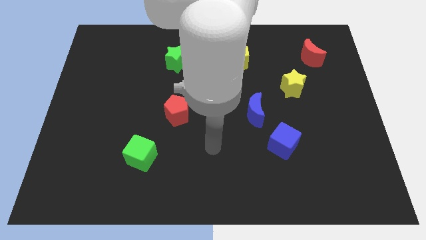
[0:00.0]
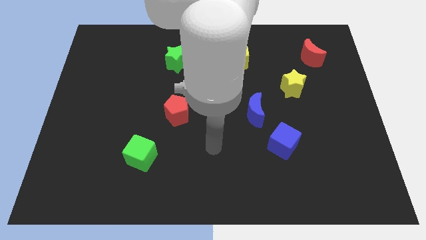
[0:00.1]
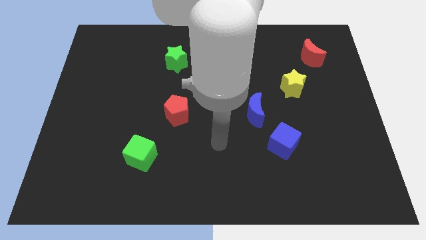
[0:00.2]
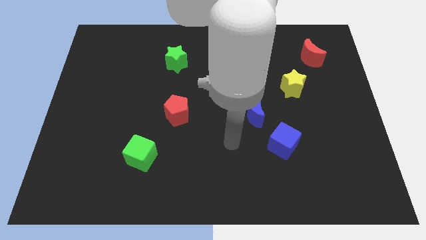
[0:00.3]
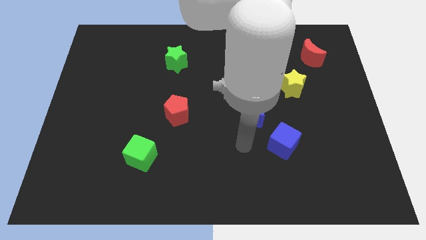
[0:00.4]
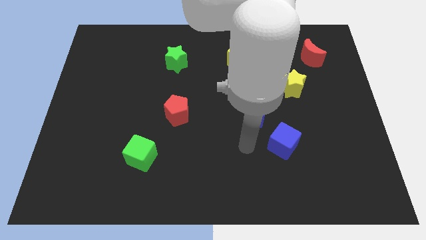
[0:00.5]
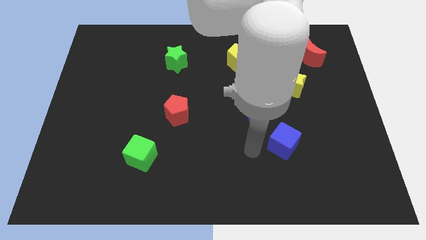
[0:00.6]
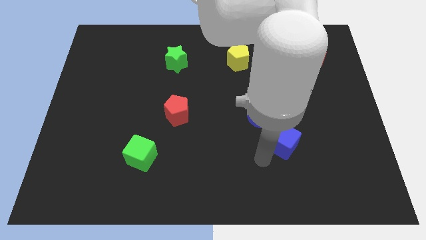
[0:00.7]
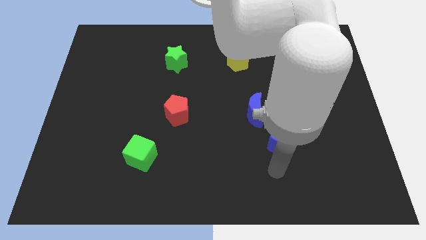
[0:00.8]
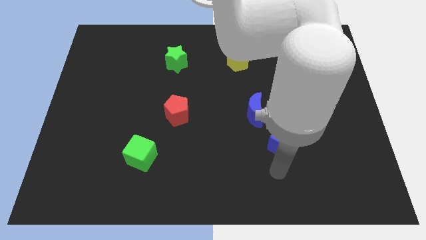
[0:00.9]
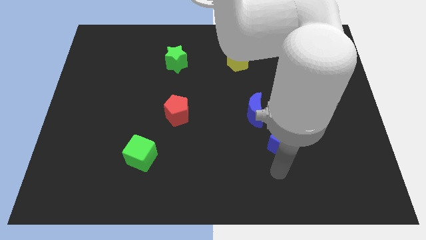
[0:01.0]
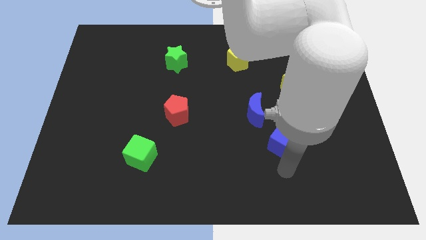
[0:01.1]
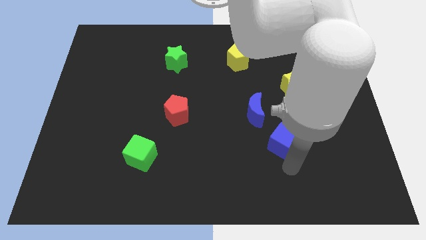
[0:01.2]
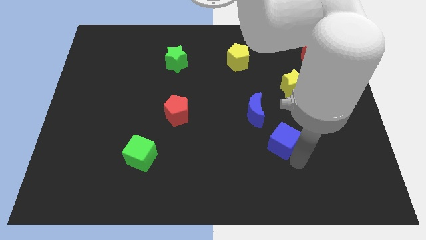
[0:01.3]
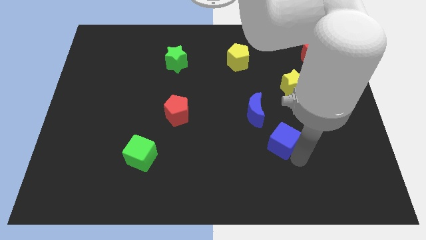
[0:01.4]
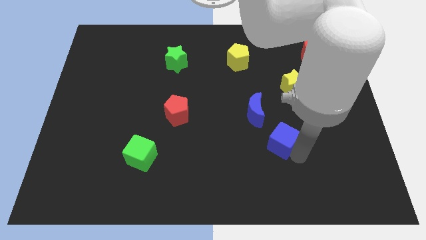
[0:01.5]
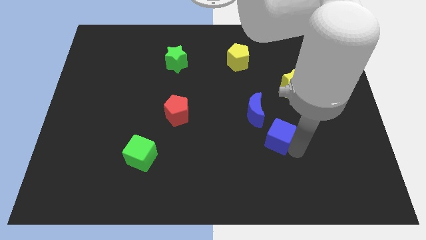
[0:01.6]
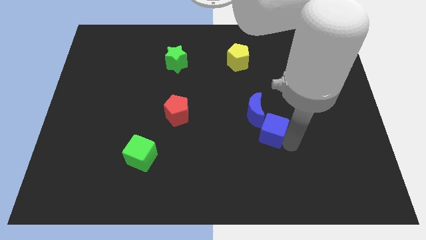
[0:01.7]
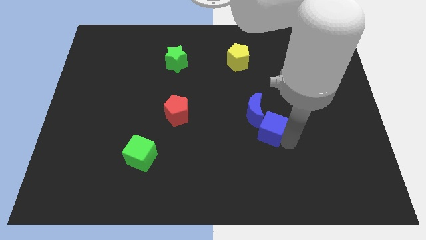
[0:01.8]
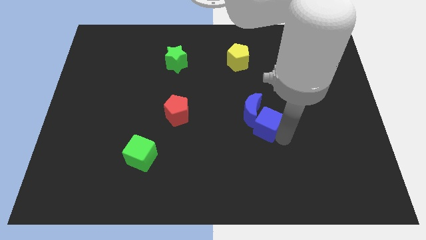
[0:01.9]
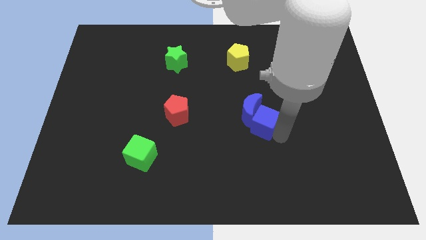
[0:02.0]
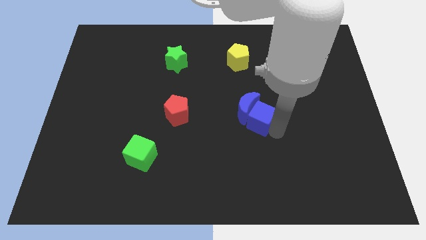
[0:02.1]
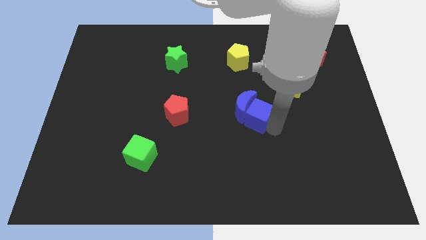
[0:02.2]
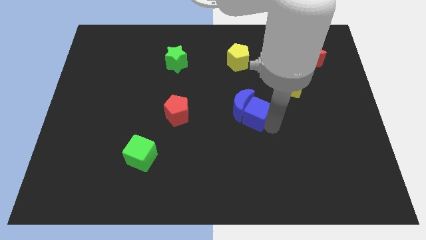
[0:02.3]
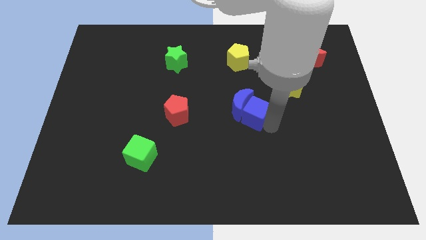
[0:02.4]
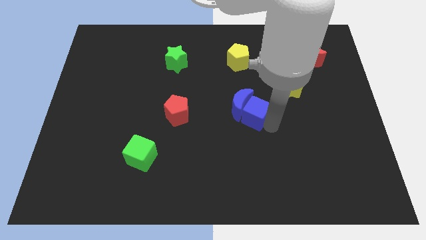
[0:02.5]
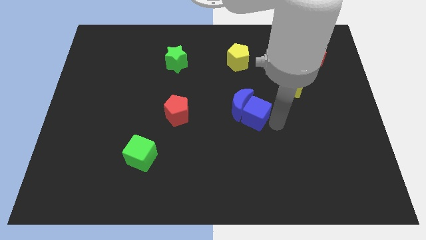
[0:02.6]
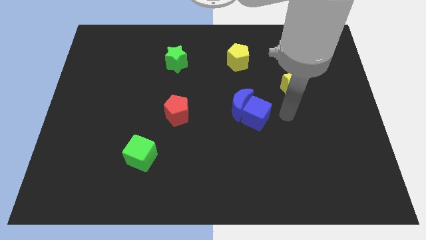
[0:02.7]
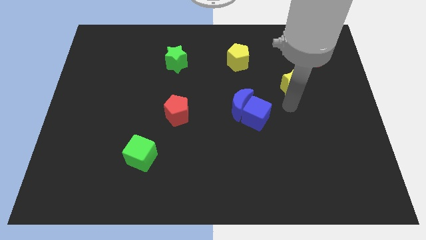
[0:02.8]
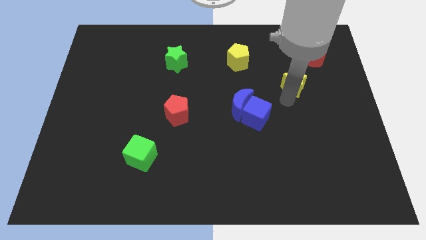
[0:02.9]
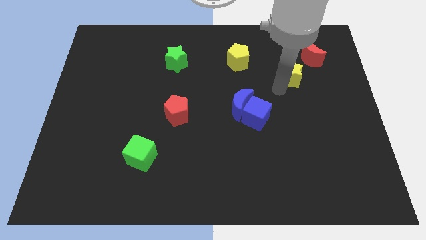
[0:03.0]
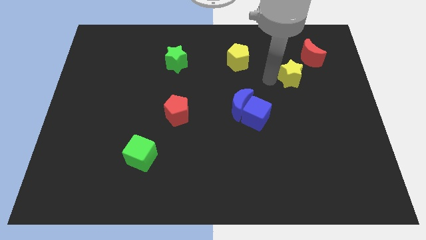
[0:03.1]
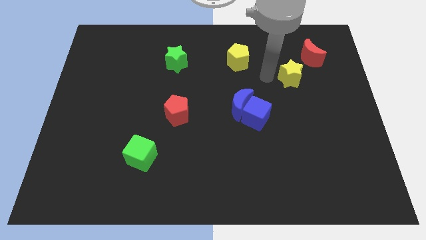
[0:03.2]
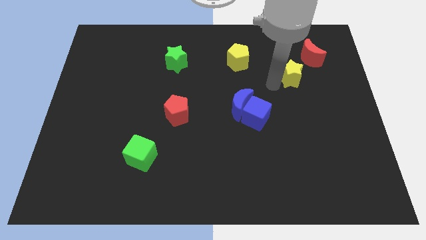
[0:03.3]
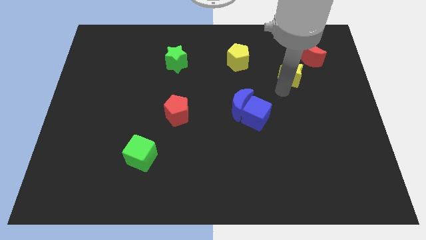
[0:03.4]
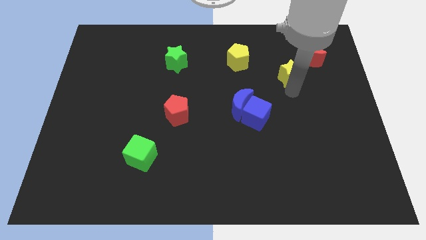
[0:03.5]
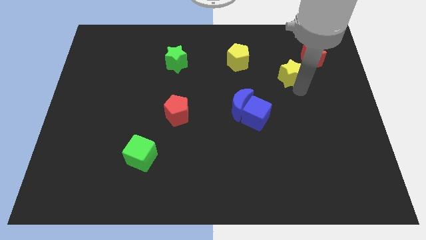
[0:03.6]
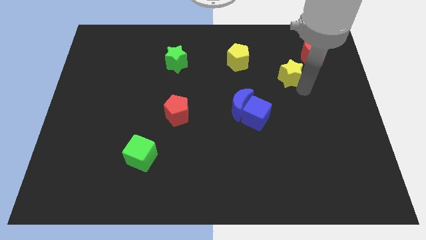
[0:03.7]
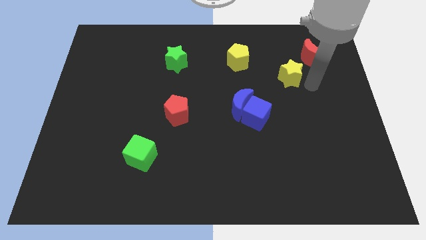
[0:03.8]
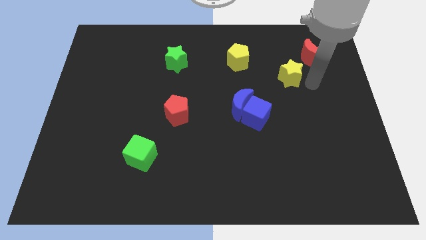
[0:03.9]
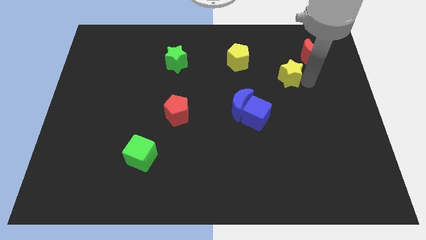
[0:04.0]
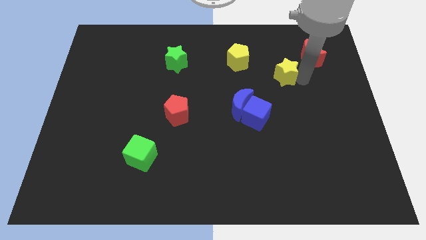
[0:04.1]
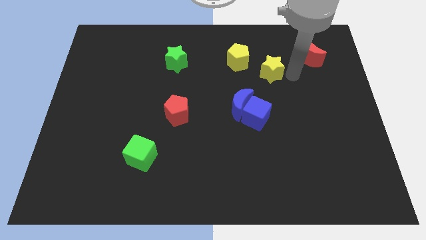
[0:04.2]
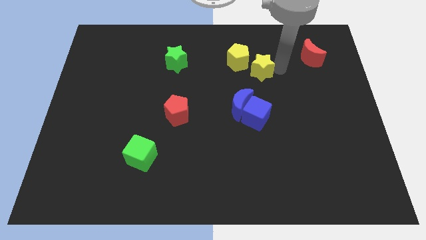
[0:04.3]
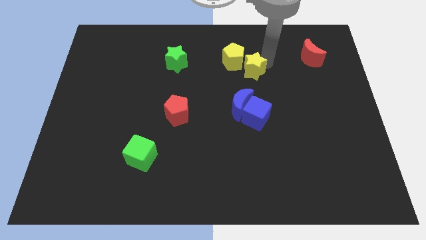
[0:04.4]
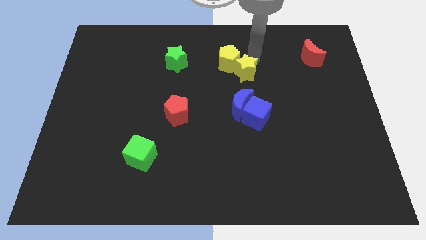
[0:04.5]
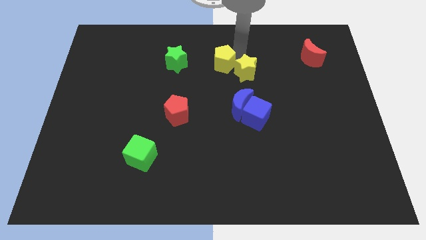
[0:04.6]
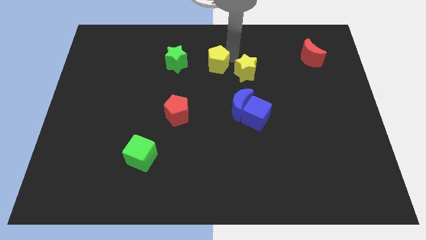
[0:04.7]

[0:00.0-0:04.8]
push the blue cube into the blue crescent

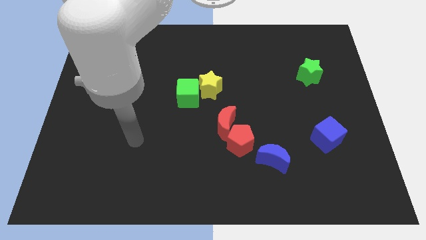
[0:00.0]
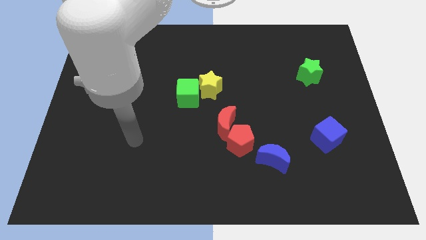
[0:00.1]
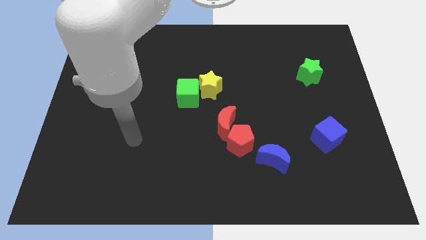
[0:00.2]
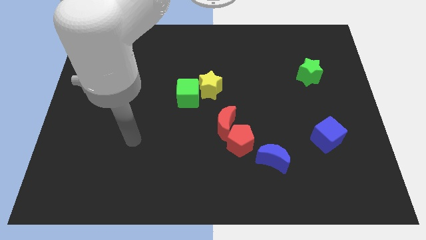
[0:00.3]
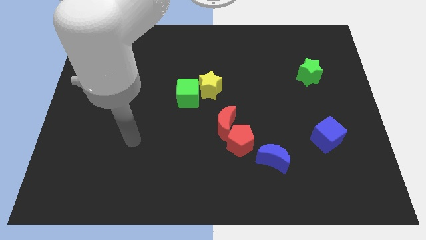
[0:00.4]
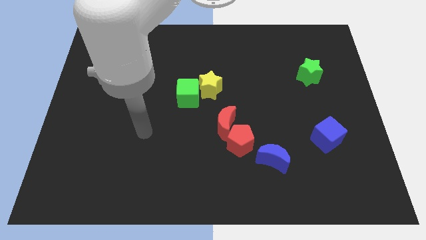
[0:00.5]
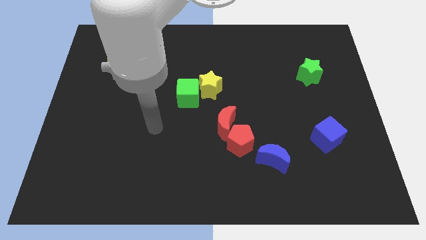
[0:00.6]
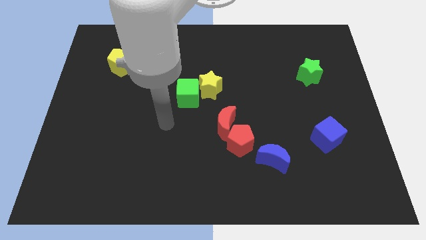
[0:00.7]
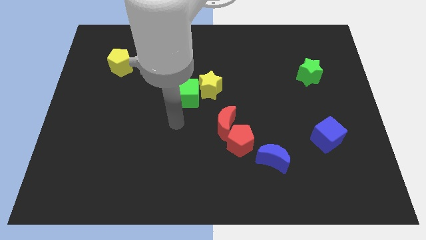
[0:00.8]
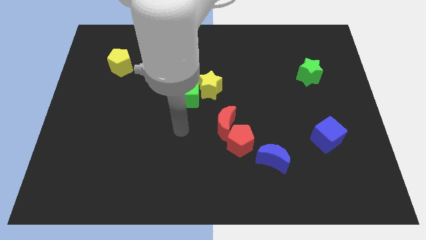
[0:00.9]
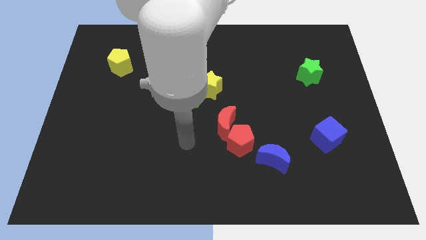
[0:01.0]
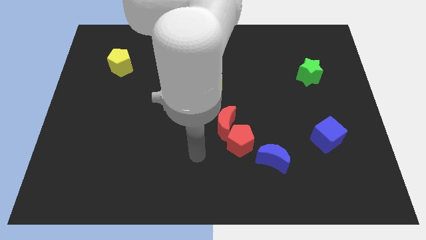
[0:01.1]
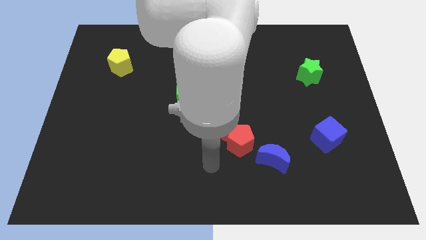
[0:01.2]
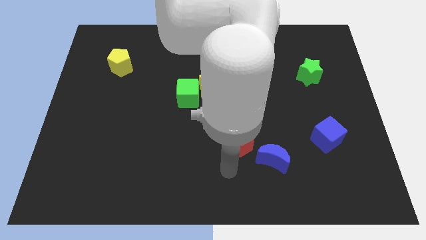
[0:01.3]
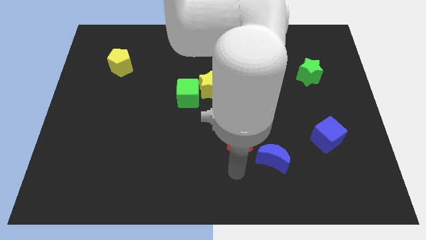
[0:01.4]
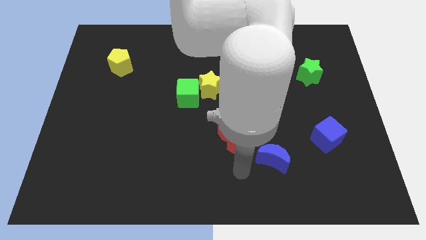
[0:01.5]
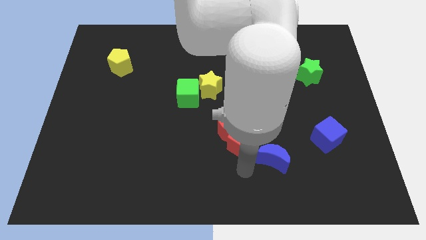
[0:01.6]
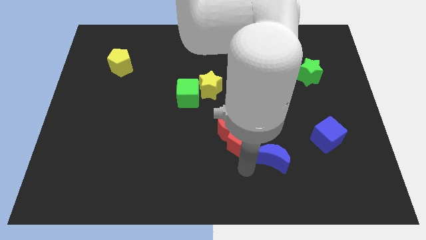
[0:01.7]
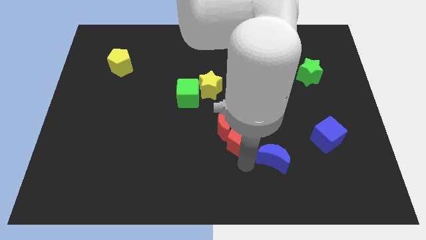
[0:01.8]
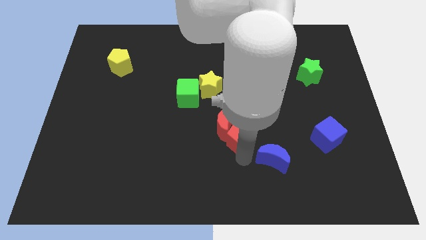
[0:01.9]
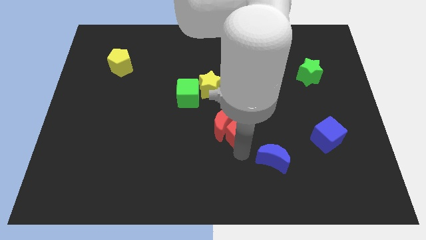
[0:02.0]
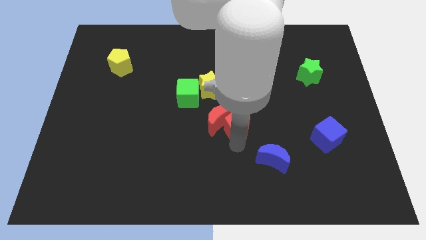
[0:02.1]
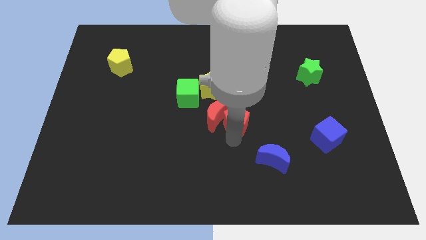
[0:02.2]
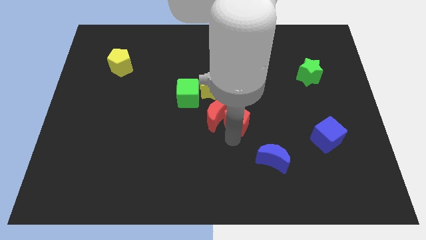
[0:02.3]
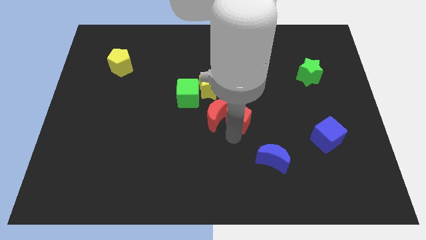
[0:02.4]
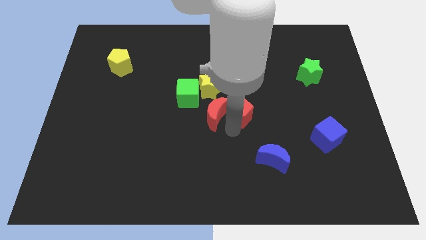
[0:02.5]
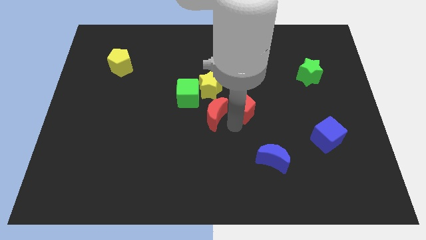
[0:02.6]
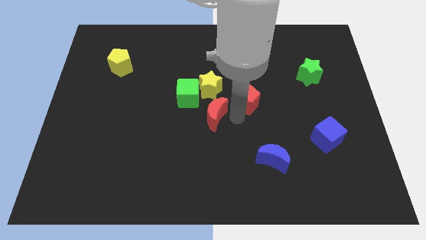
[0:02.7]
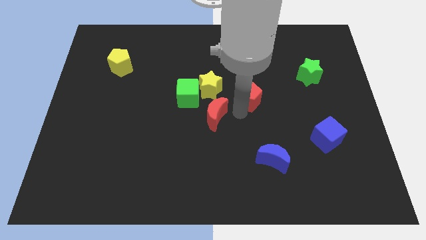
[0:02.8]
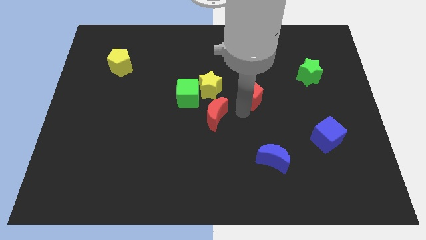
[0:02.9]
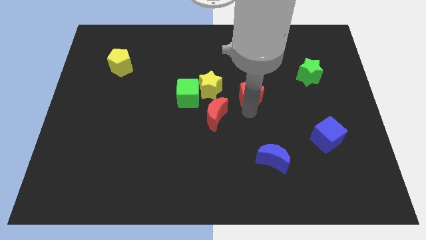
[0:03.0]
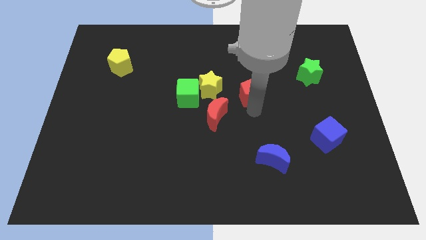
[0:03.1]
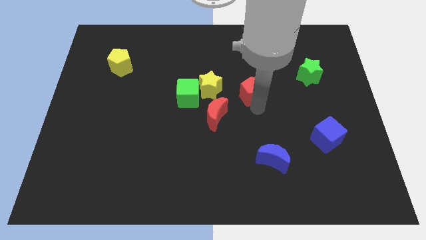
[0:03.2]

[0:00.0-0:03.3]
separate the red pentagon from the red crescent

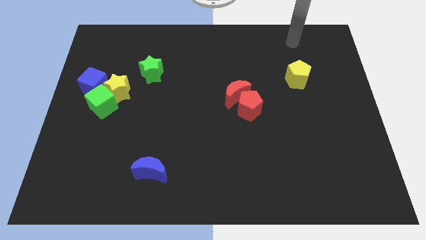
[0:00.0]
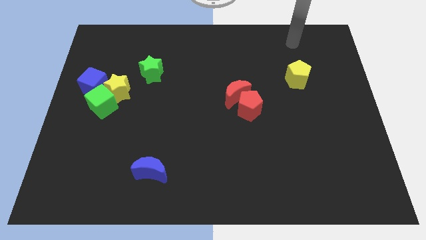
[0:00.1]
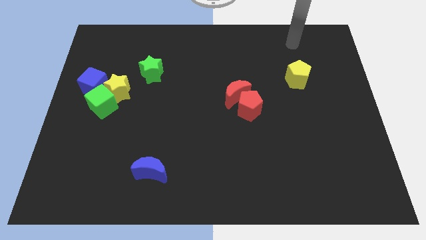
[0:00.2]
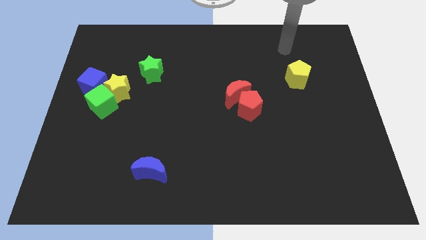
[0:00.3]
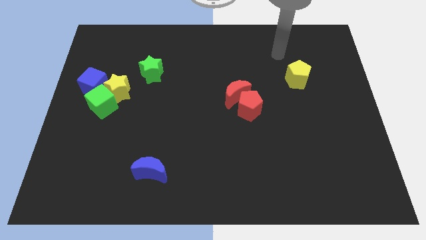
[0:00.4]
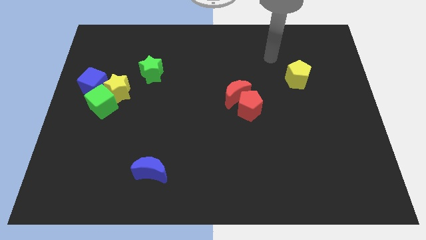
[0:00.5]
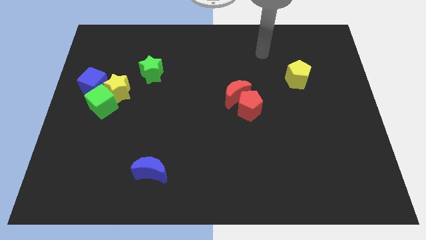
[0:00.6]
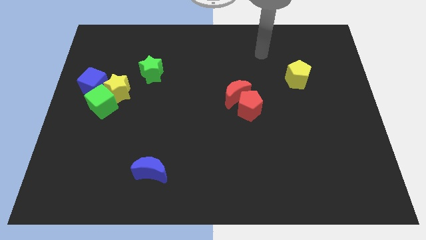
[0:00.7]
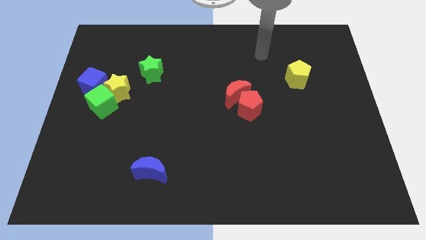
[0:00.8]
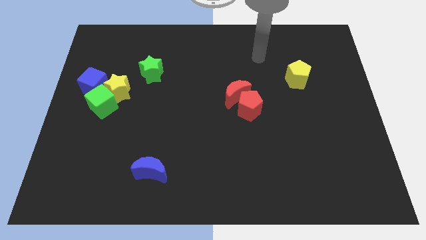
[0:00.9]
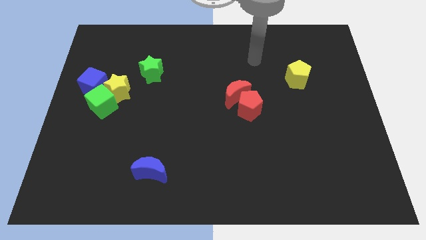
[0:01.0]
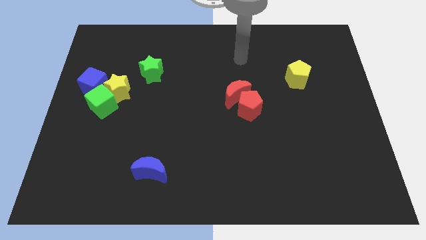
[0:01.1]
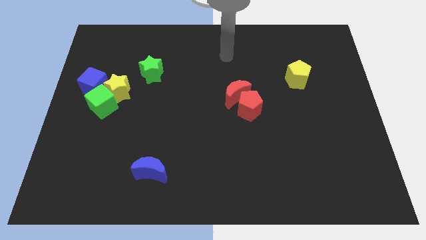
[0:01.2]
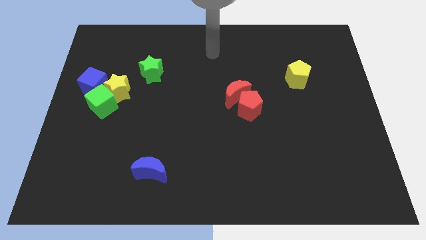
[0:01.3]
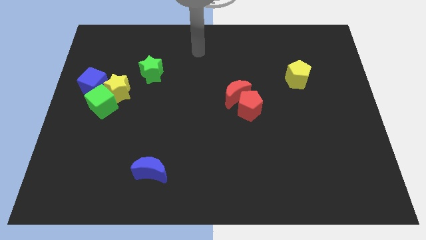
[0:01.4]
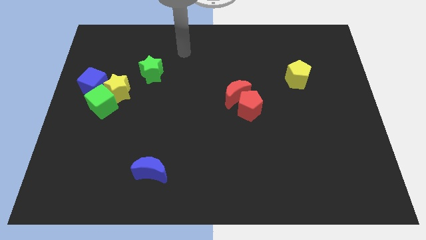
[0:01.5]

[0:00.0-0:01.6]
move your hand towards left side
